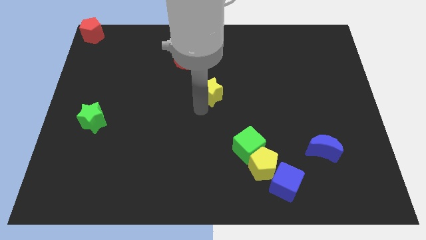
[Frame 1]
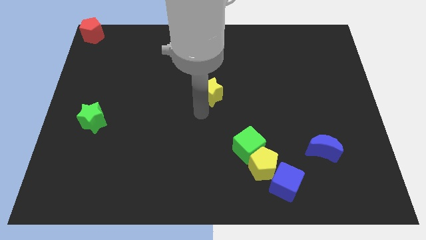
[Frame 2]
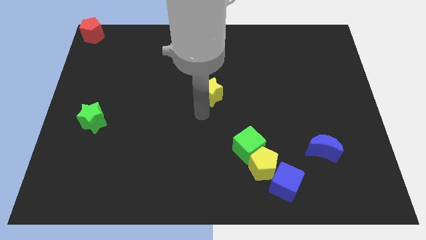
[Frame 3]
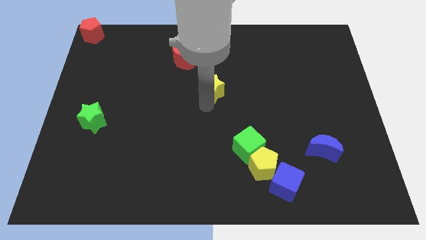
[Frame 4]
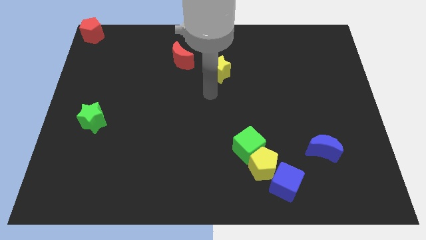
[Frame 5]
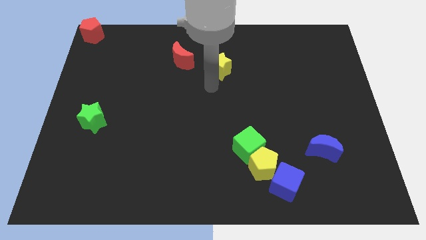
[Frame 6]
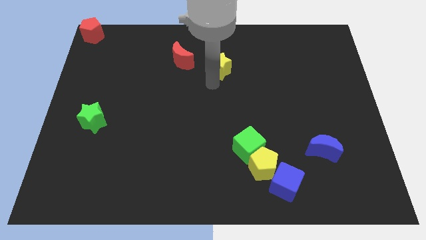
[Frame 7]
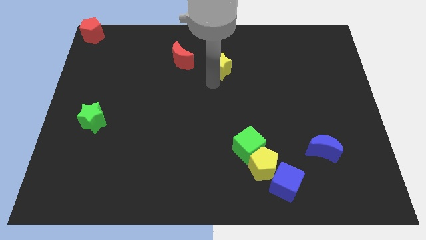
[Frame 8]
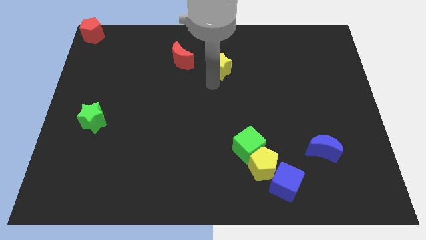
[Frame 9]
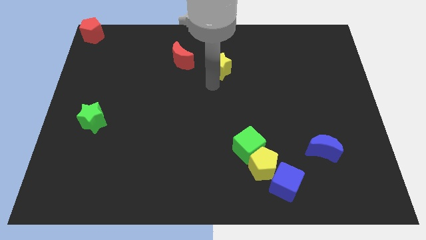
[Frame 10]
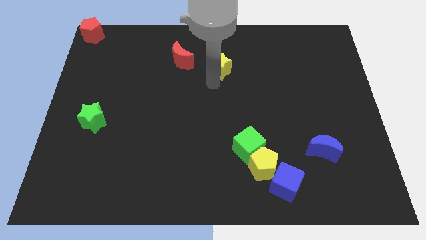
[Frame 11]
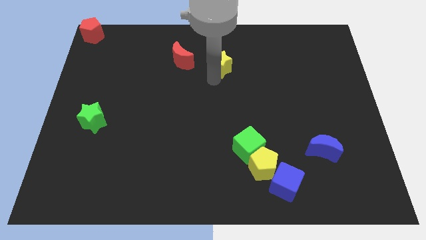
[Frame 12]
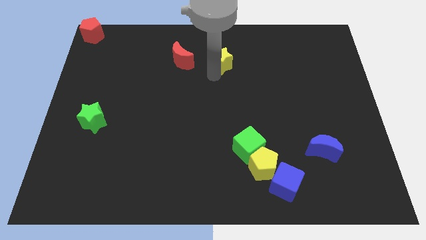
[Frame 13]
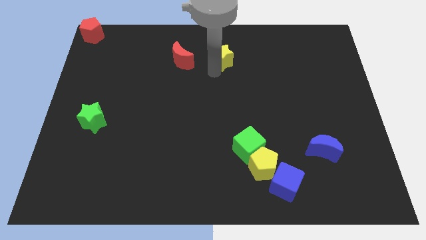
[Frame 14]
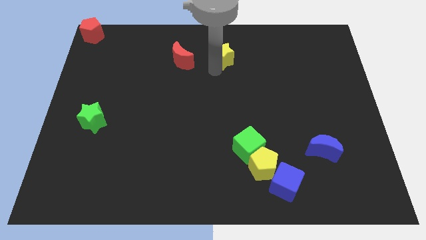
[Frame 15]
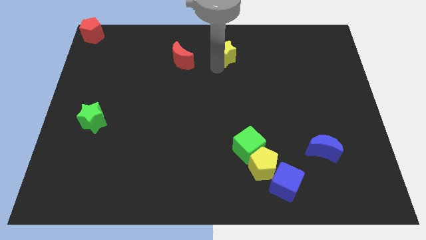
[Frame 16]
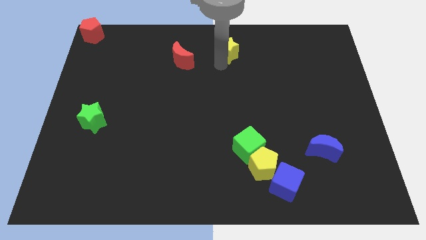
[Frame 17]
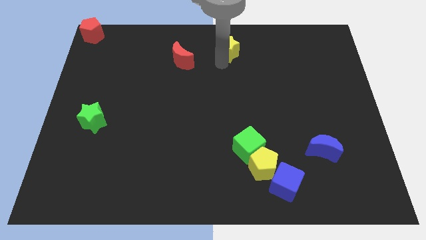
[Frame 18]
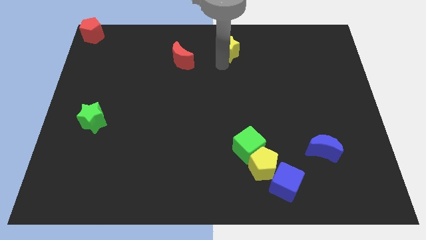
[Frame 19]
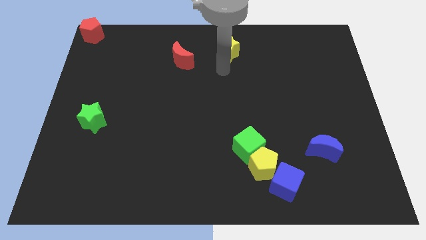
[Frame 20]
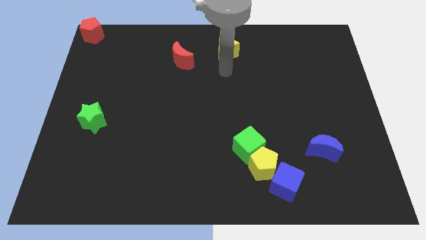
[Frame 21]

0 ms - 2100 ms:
place yellow star diagonal to the right of red moon

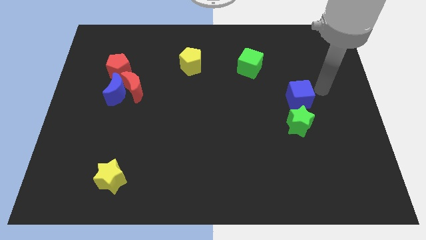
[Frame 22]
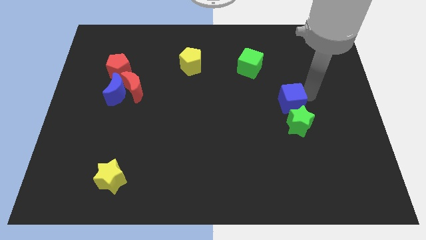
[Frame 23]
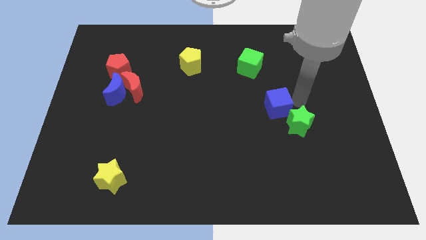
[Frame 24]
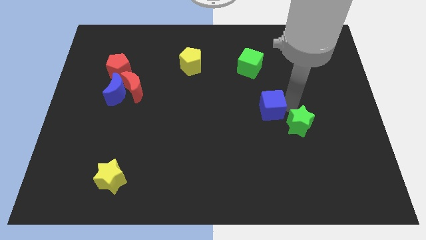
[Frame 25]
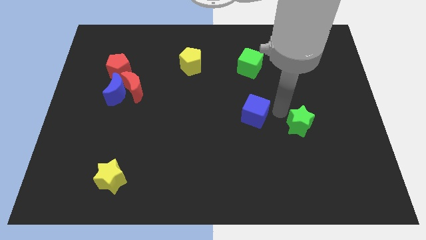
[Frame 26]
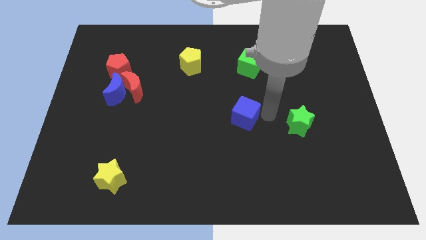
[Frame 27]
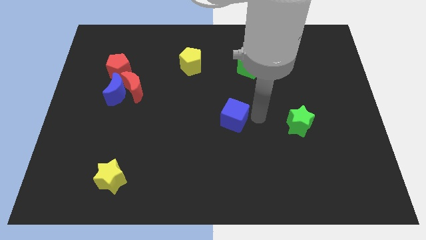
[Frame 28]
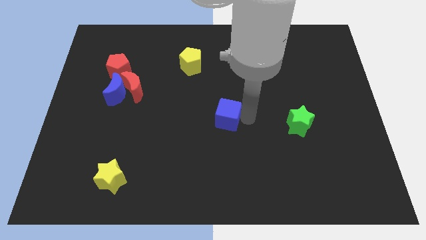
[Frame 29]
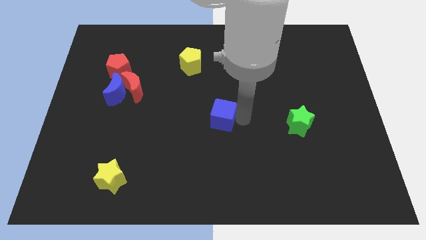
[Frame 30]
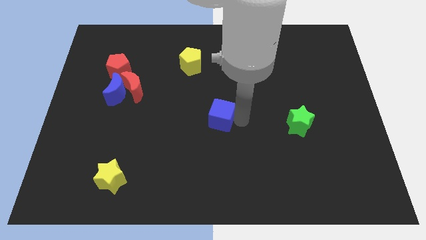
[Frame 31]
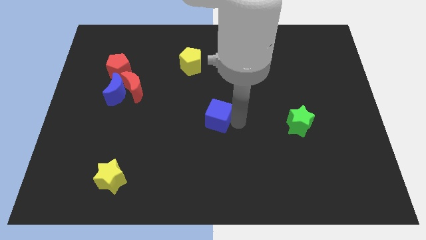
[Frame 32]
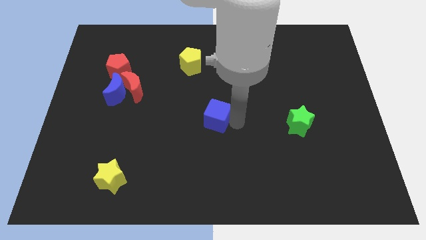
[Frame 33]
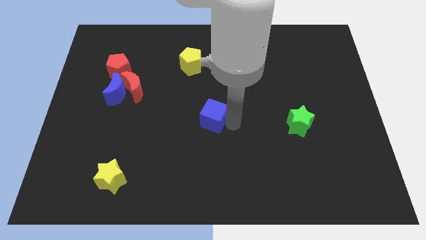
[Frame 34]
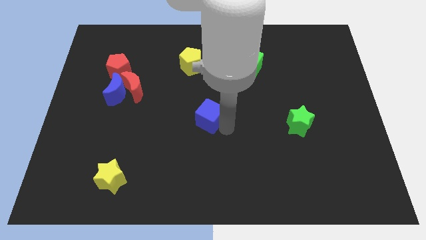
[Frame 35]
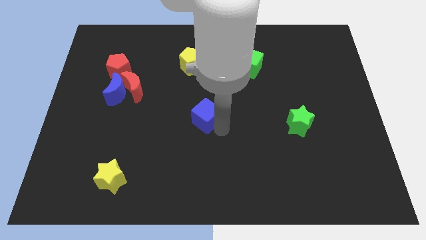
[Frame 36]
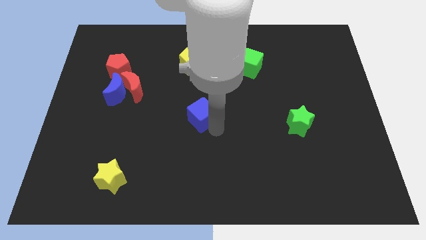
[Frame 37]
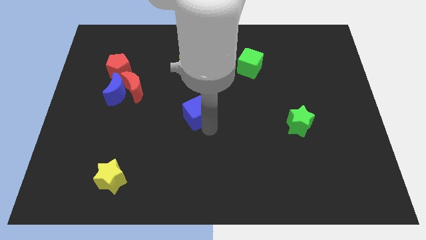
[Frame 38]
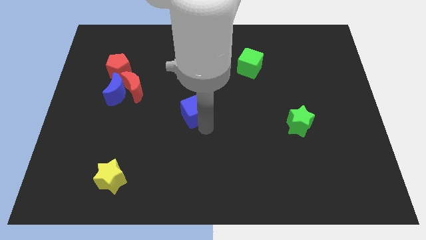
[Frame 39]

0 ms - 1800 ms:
move the blue cube to the center

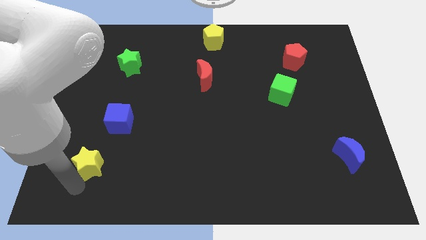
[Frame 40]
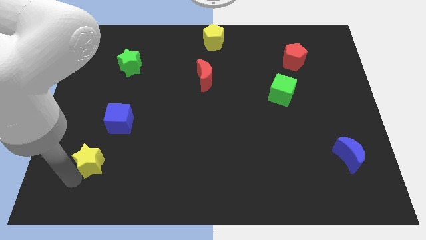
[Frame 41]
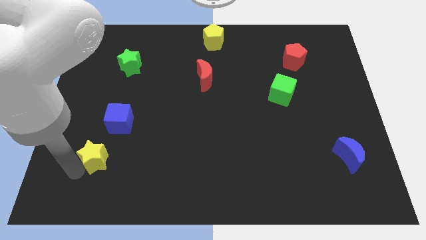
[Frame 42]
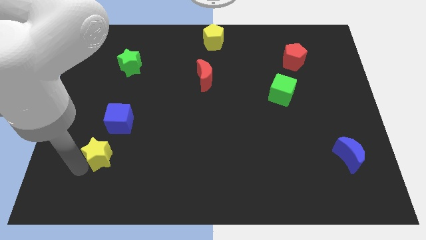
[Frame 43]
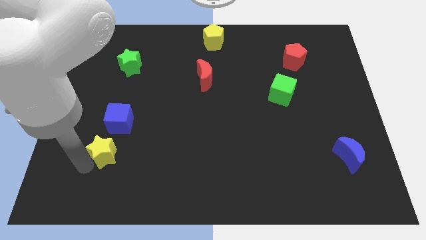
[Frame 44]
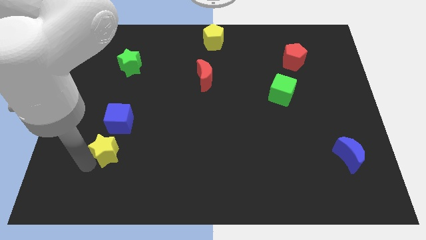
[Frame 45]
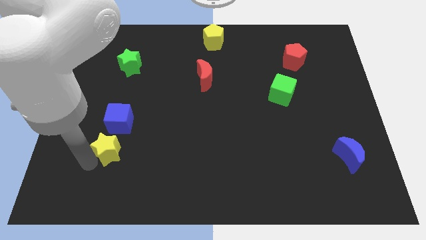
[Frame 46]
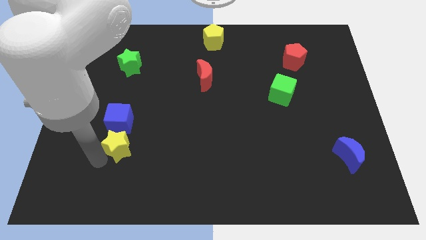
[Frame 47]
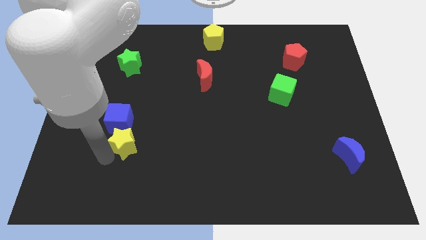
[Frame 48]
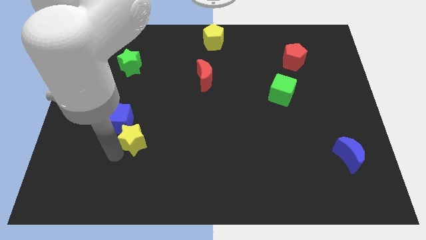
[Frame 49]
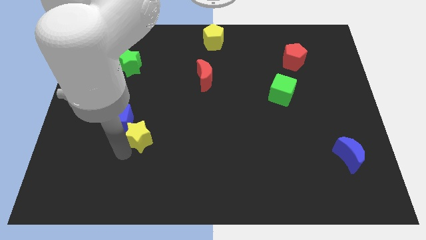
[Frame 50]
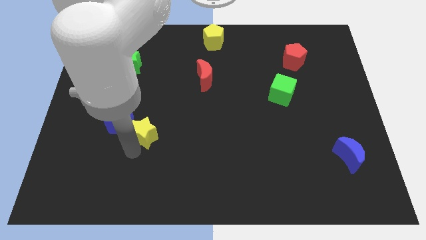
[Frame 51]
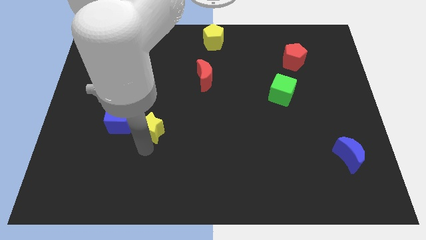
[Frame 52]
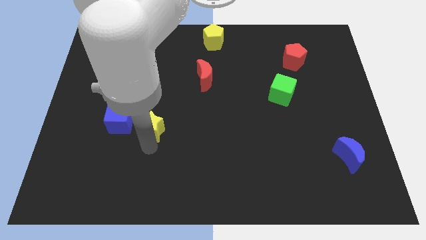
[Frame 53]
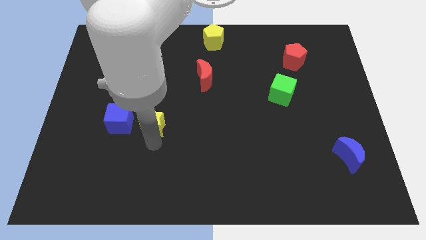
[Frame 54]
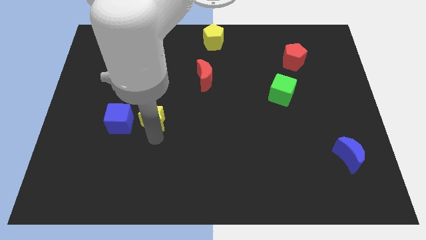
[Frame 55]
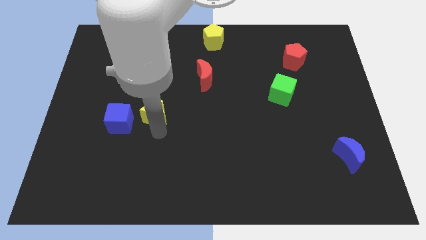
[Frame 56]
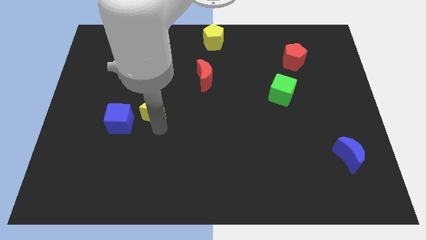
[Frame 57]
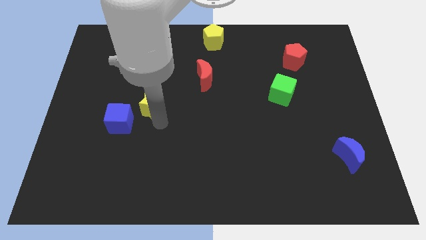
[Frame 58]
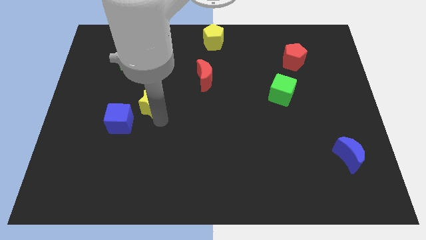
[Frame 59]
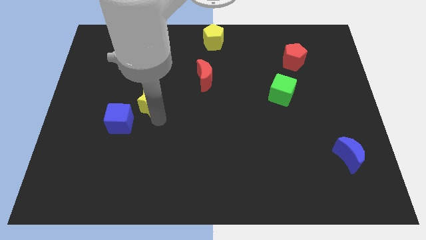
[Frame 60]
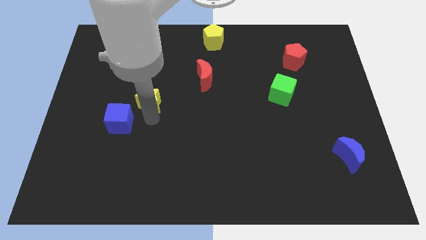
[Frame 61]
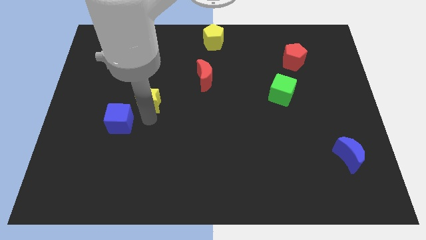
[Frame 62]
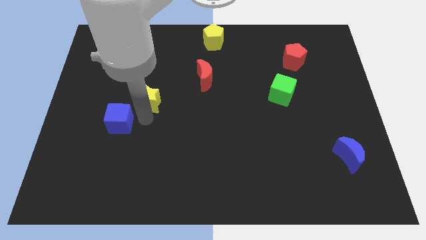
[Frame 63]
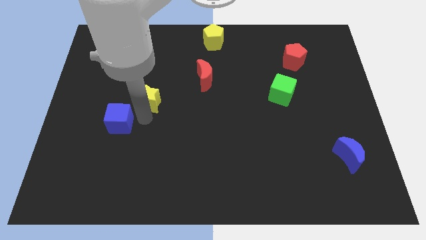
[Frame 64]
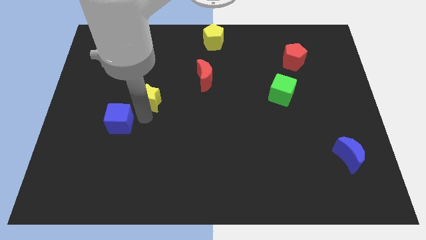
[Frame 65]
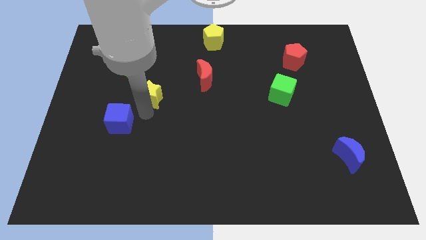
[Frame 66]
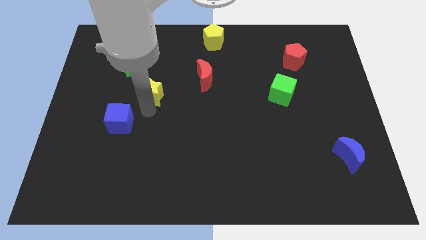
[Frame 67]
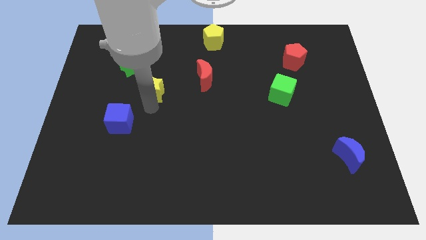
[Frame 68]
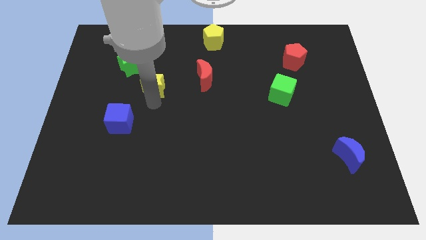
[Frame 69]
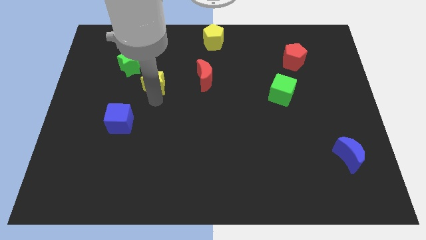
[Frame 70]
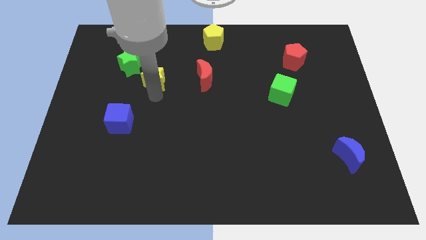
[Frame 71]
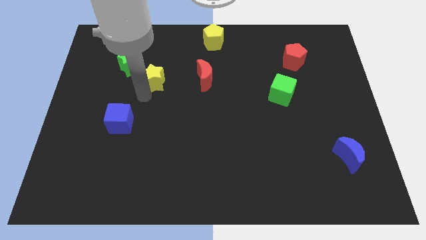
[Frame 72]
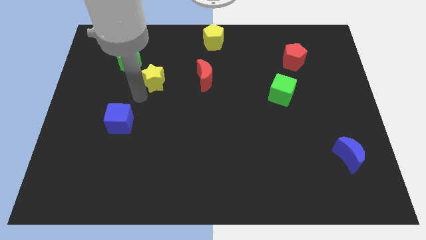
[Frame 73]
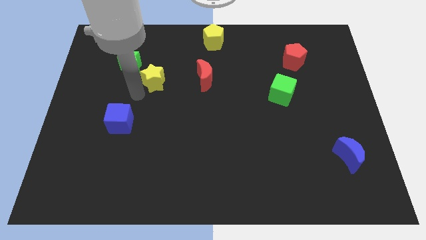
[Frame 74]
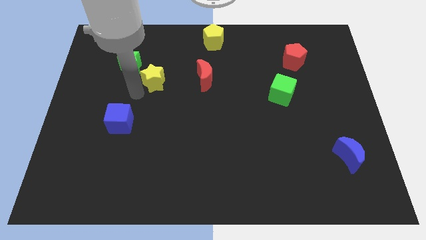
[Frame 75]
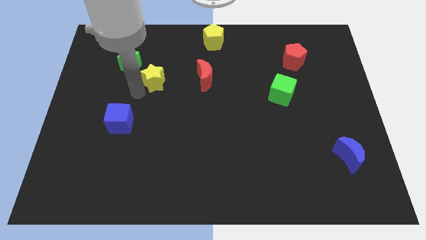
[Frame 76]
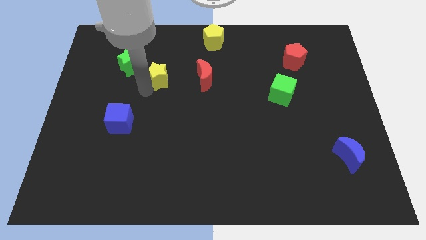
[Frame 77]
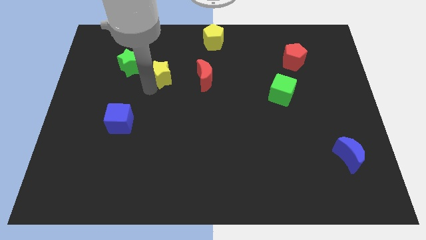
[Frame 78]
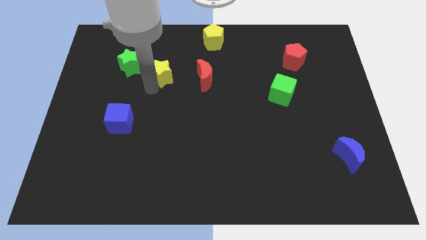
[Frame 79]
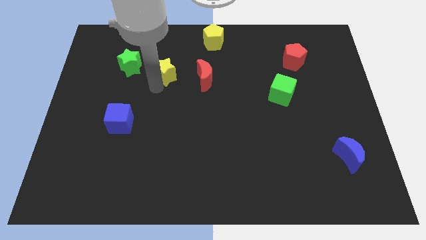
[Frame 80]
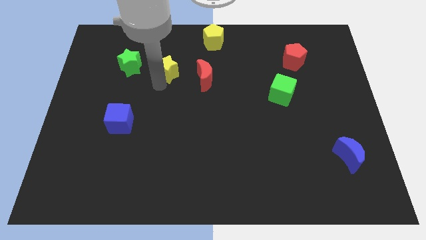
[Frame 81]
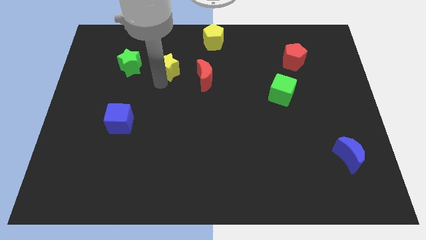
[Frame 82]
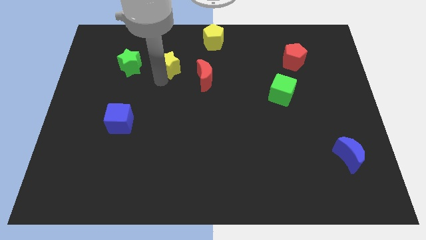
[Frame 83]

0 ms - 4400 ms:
place the yellow star in between the red moon and green star

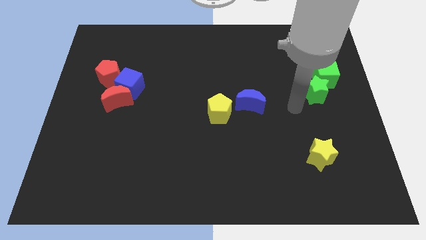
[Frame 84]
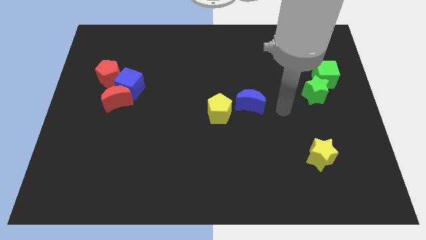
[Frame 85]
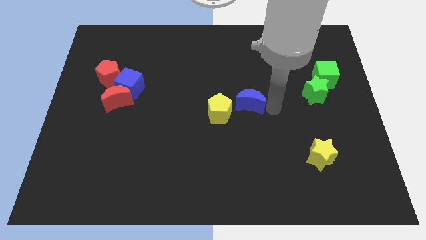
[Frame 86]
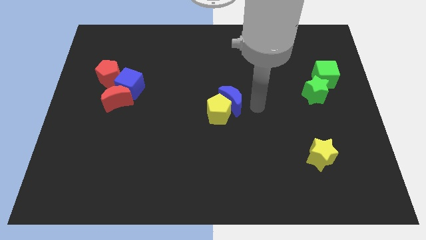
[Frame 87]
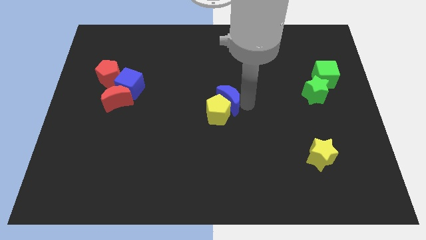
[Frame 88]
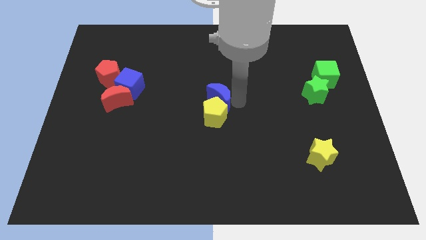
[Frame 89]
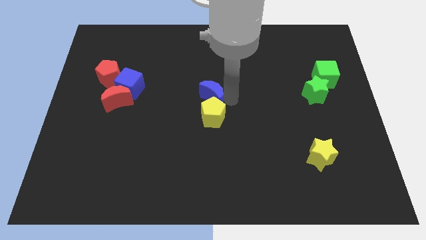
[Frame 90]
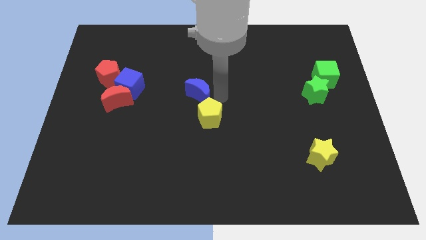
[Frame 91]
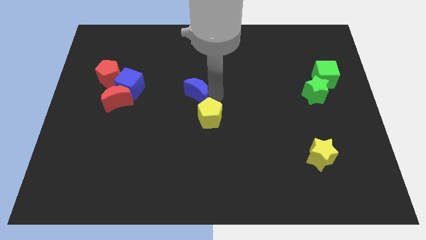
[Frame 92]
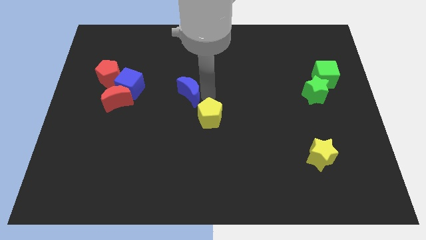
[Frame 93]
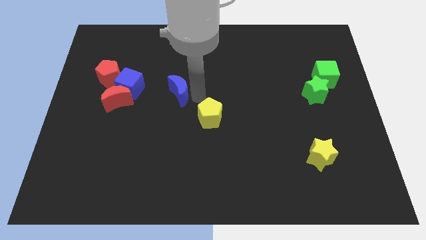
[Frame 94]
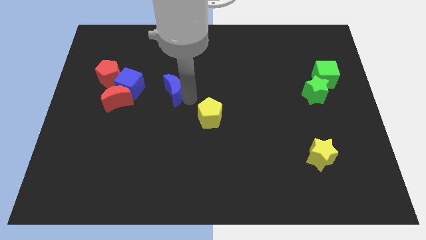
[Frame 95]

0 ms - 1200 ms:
separate the blue moon from the yellow pentagon
